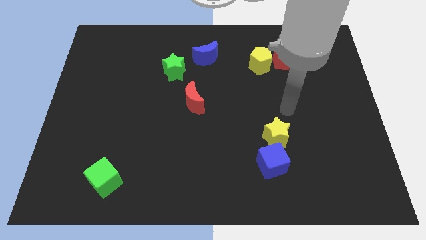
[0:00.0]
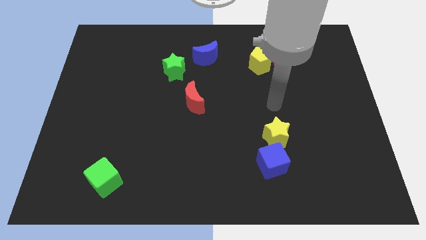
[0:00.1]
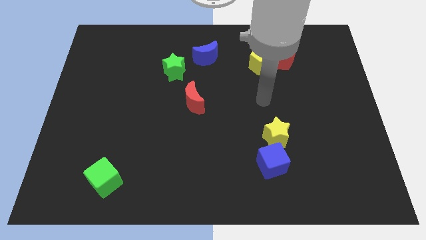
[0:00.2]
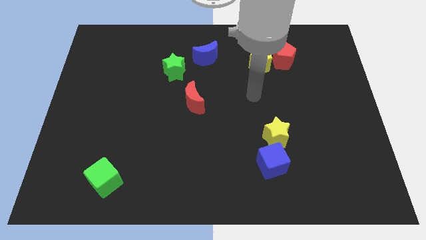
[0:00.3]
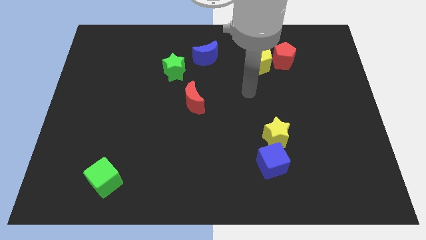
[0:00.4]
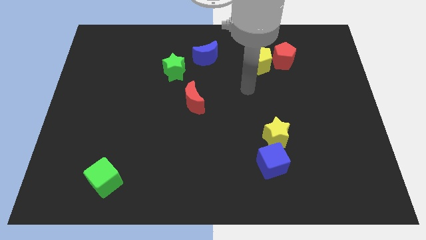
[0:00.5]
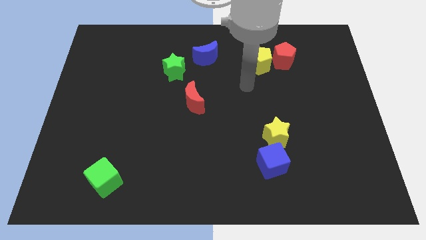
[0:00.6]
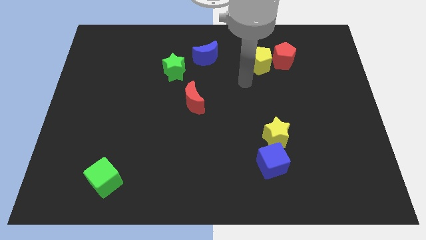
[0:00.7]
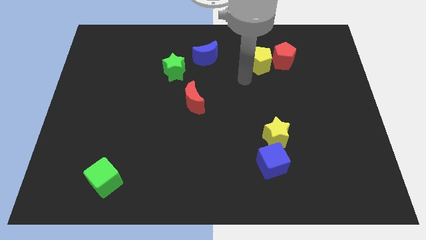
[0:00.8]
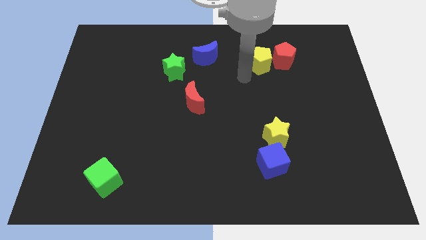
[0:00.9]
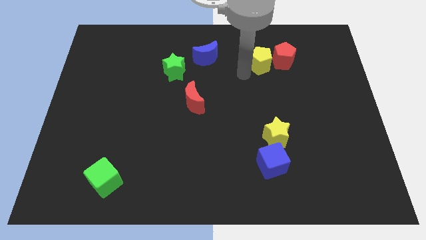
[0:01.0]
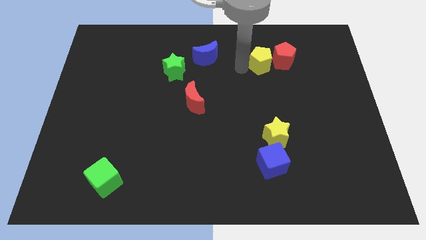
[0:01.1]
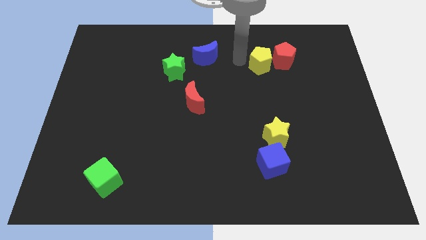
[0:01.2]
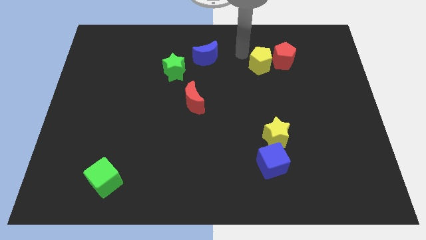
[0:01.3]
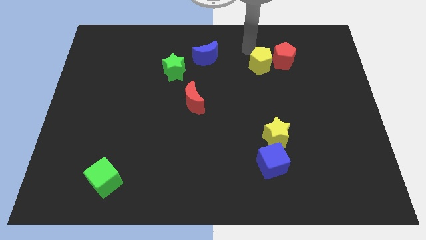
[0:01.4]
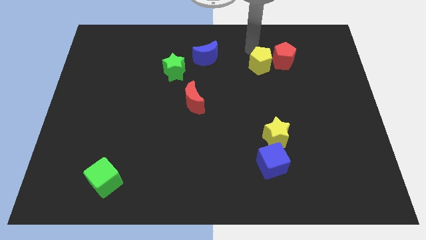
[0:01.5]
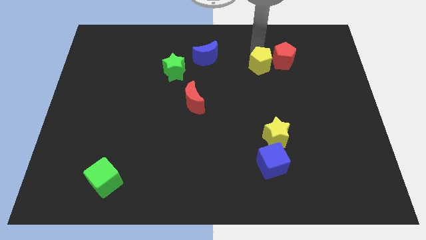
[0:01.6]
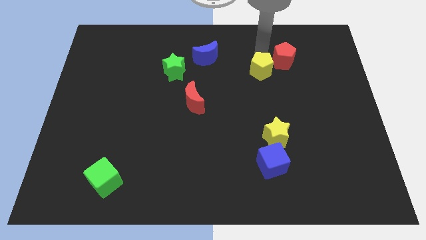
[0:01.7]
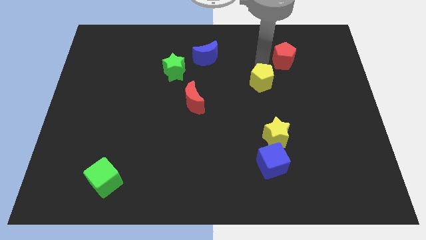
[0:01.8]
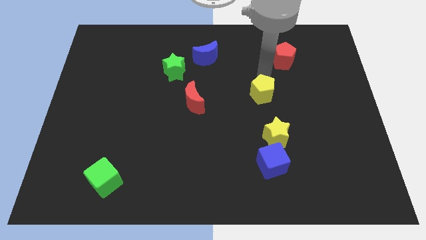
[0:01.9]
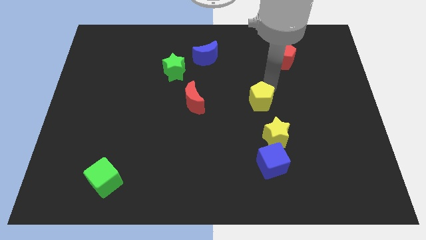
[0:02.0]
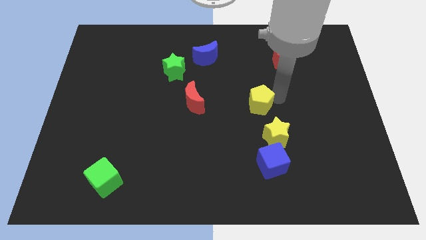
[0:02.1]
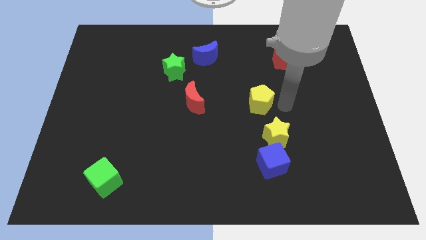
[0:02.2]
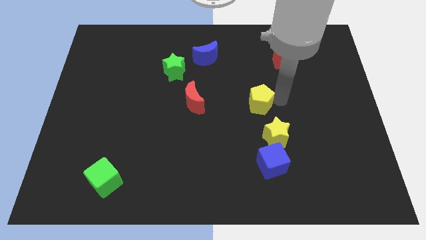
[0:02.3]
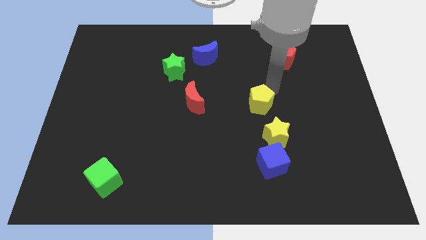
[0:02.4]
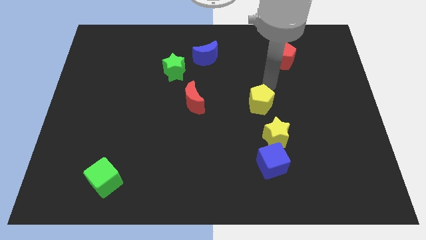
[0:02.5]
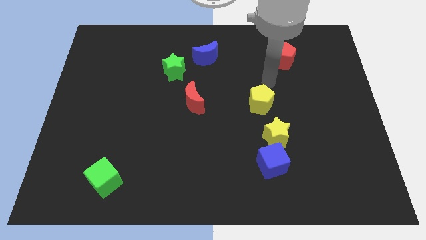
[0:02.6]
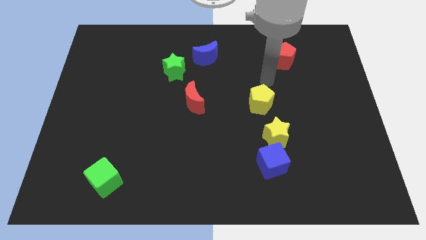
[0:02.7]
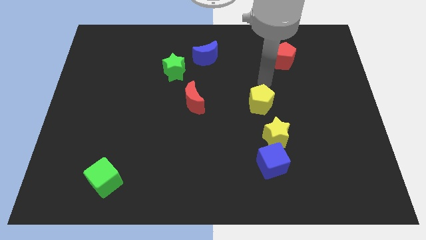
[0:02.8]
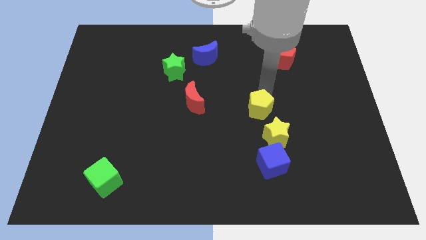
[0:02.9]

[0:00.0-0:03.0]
move the yellow pentagon slightly down

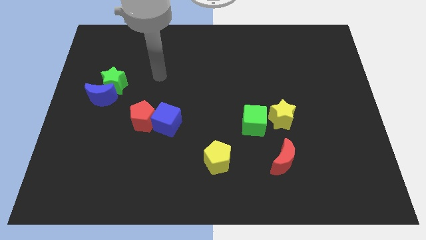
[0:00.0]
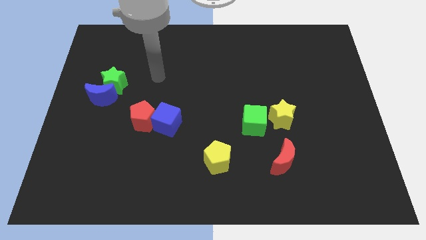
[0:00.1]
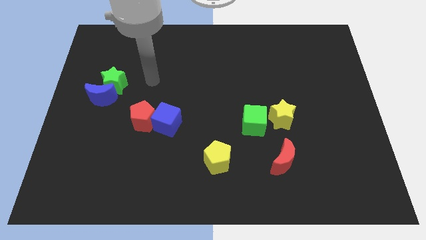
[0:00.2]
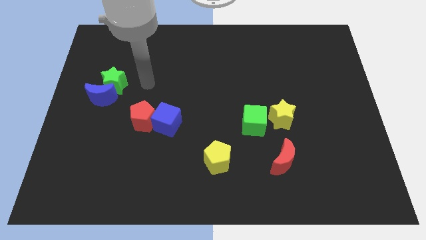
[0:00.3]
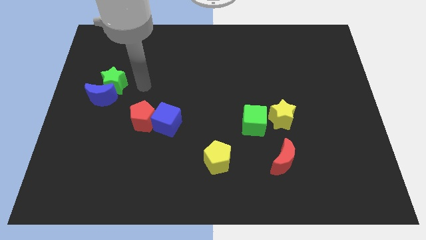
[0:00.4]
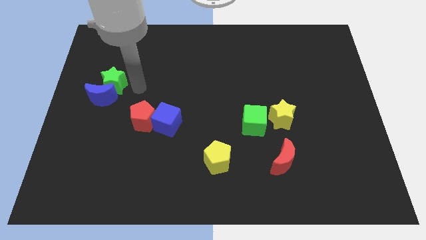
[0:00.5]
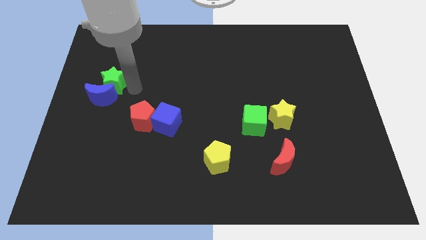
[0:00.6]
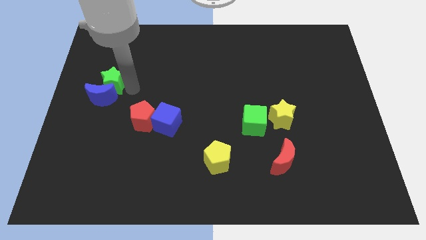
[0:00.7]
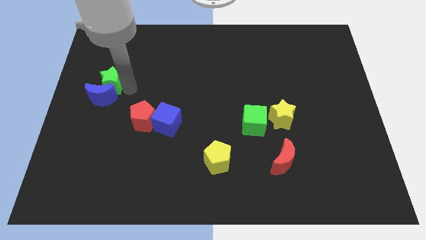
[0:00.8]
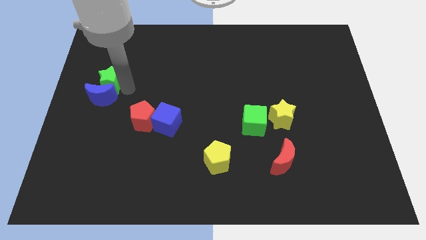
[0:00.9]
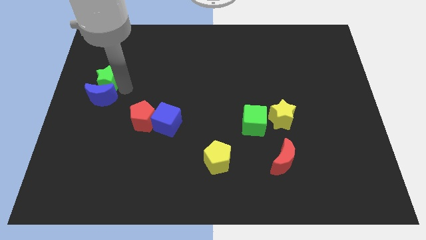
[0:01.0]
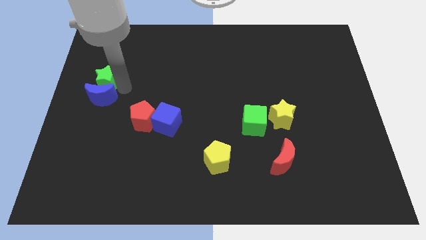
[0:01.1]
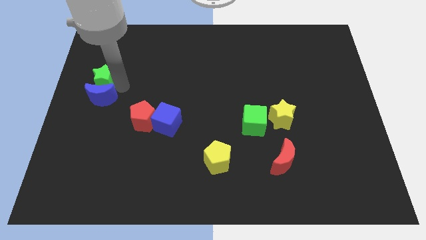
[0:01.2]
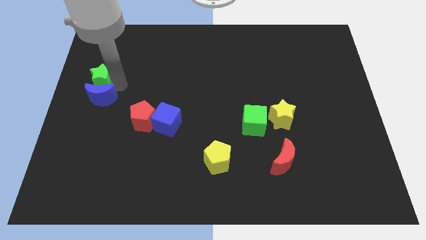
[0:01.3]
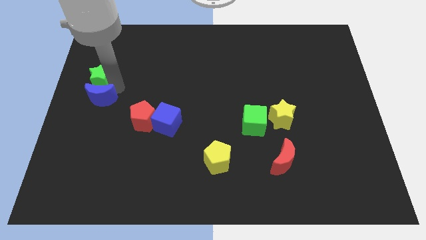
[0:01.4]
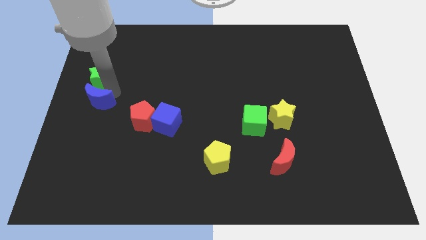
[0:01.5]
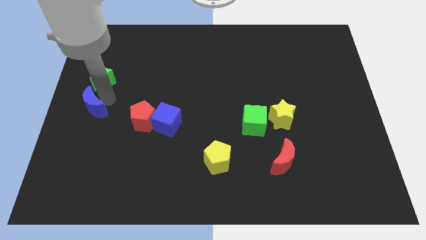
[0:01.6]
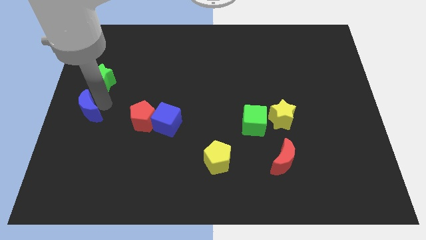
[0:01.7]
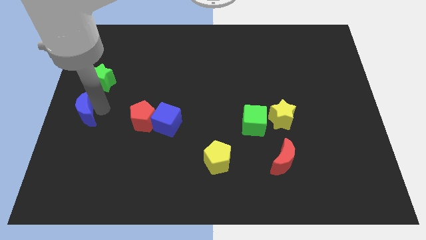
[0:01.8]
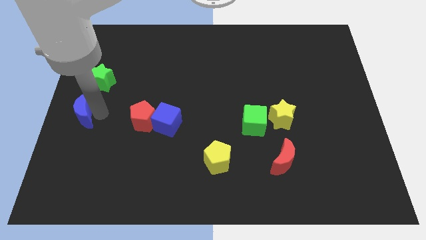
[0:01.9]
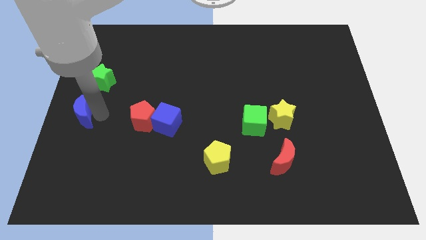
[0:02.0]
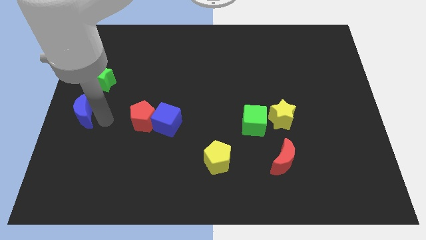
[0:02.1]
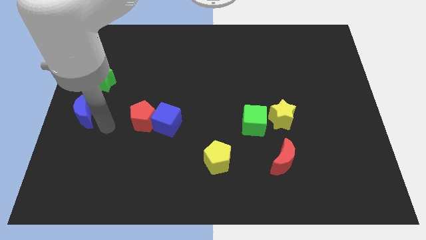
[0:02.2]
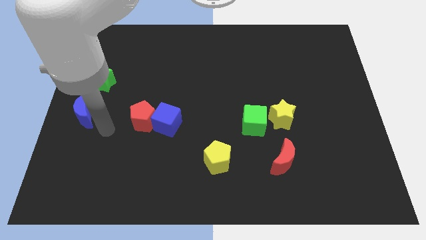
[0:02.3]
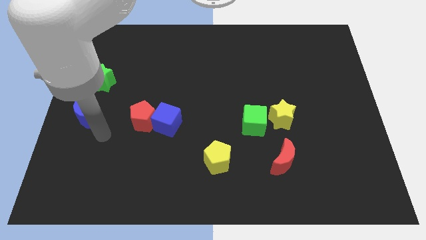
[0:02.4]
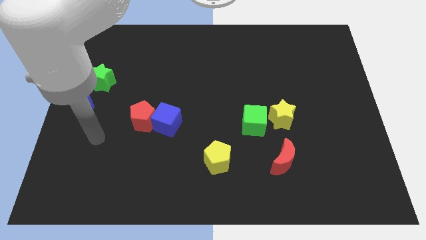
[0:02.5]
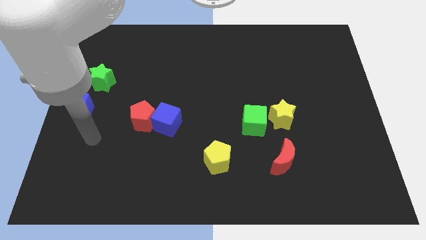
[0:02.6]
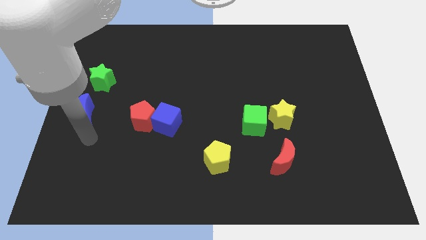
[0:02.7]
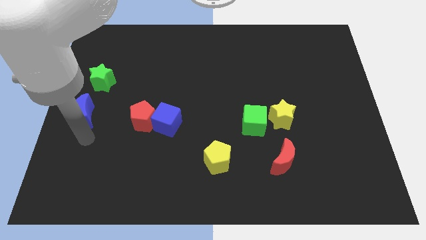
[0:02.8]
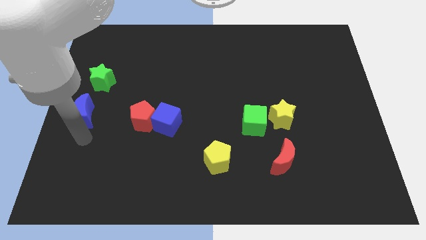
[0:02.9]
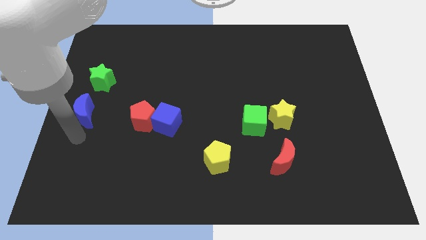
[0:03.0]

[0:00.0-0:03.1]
separate green star and the blue moon

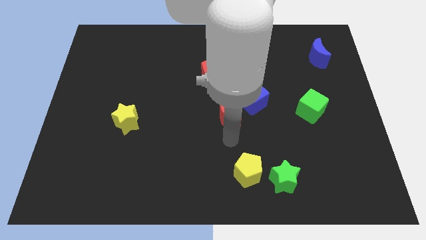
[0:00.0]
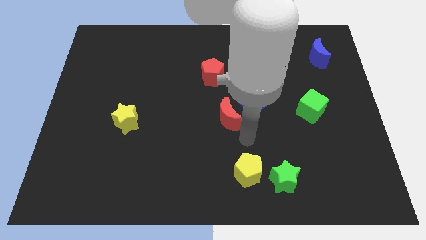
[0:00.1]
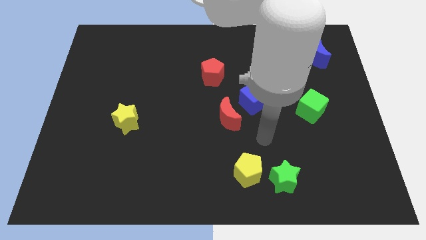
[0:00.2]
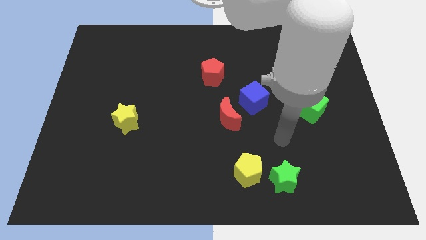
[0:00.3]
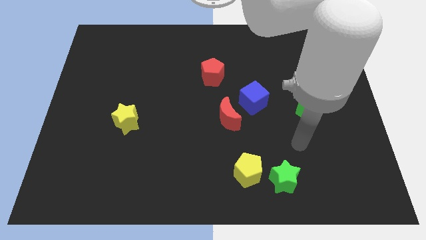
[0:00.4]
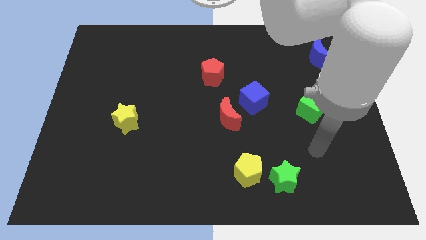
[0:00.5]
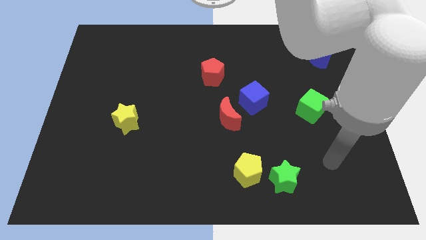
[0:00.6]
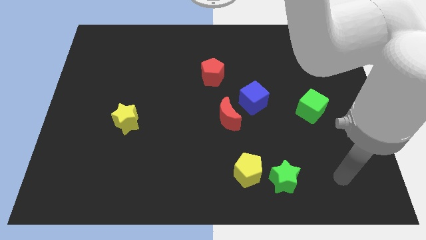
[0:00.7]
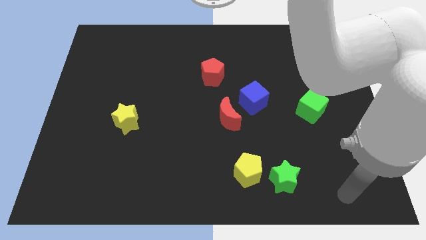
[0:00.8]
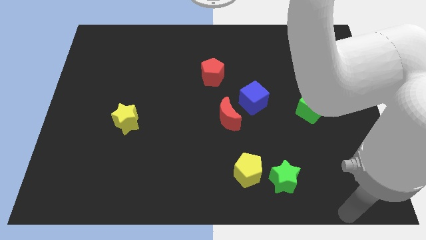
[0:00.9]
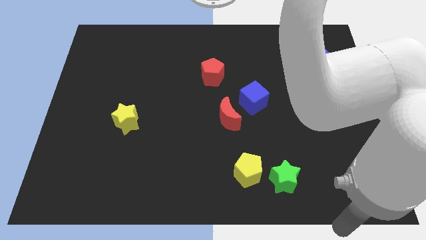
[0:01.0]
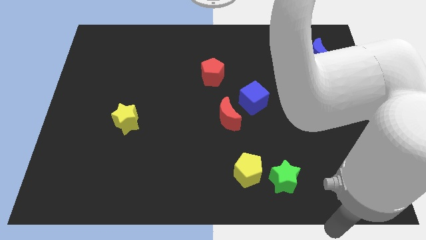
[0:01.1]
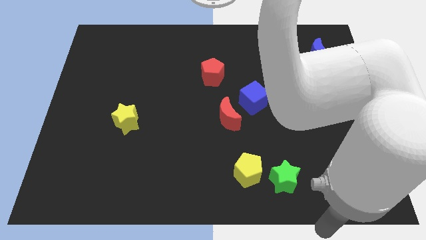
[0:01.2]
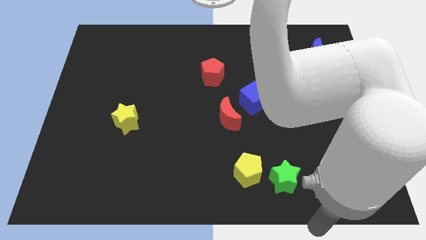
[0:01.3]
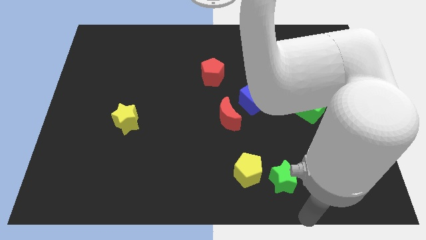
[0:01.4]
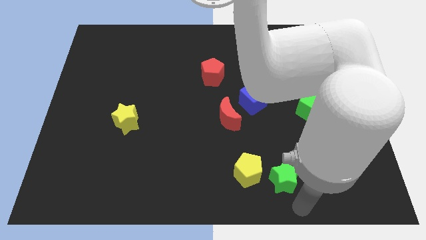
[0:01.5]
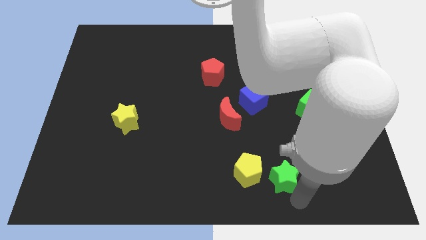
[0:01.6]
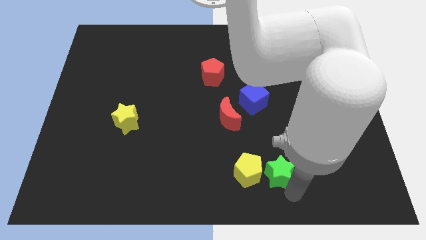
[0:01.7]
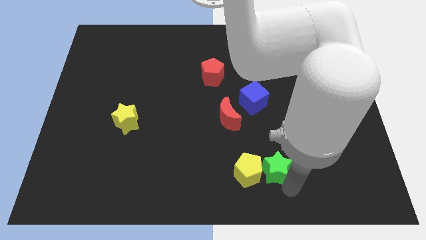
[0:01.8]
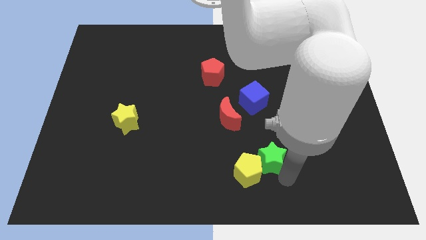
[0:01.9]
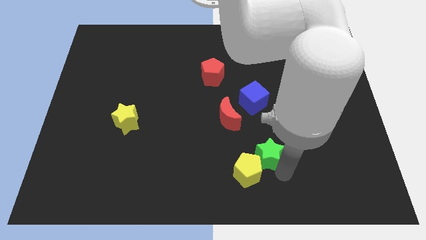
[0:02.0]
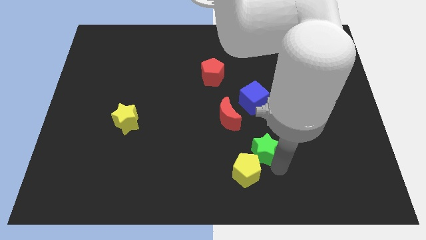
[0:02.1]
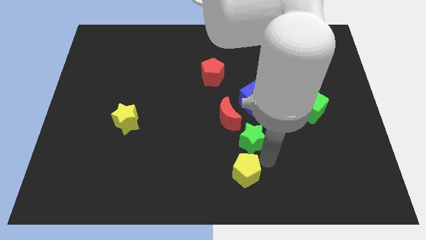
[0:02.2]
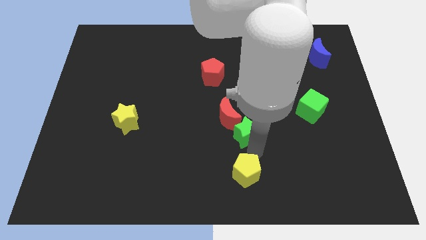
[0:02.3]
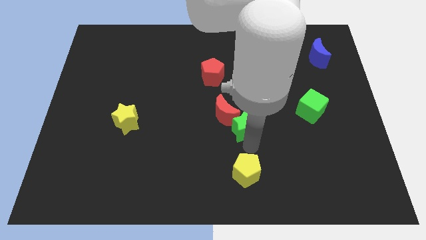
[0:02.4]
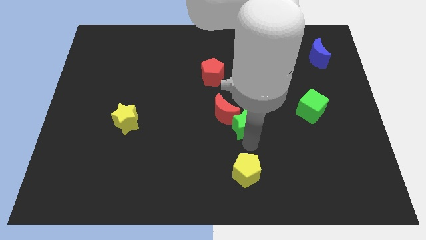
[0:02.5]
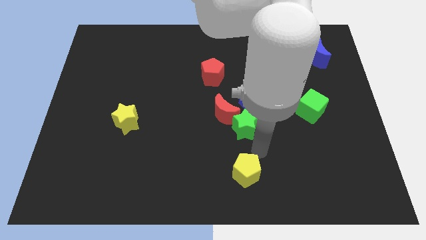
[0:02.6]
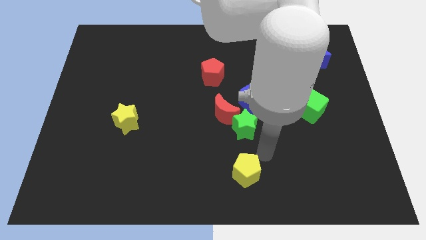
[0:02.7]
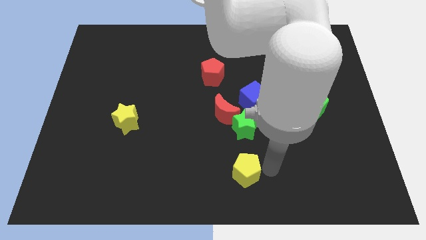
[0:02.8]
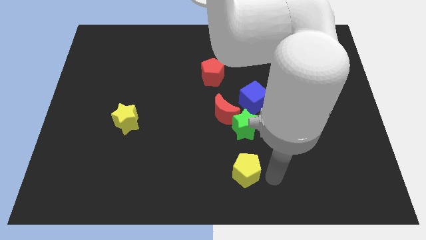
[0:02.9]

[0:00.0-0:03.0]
push the green star into the red crescent
